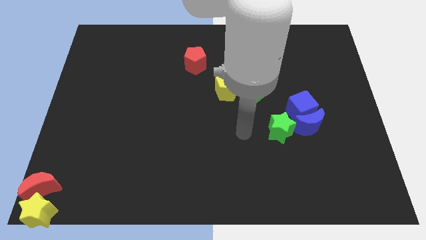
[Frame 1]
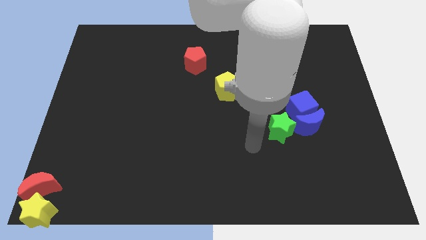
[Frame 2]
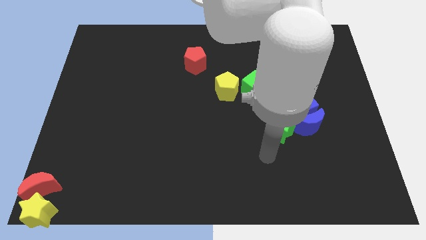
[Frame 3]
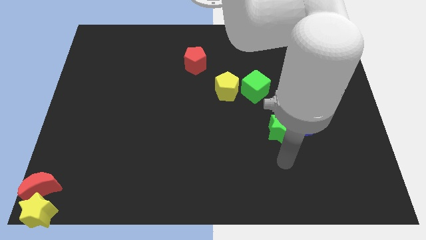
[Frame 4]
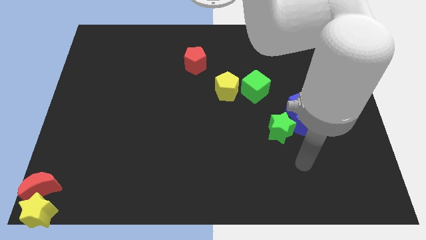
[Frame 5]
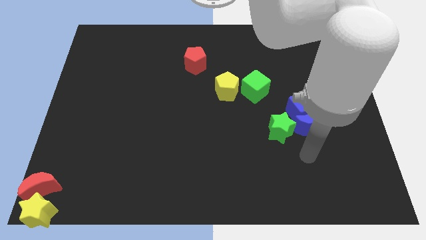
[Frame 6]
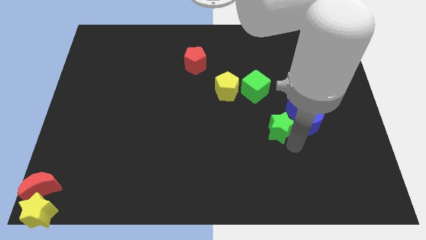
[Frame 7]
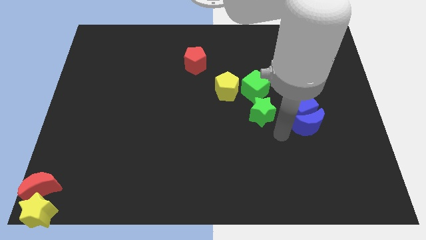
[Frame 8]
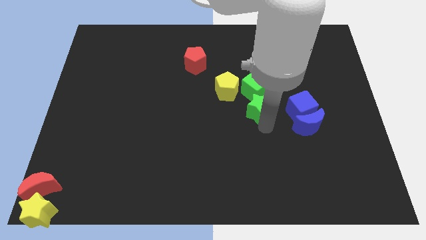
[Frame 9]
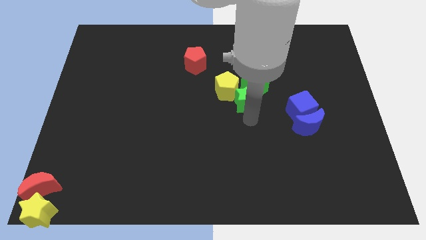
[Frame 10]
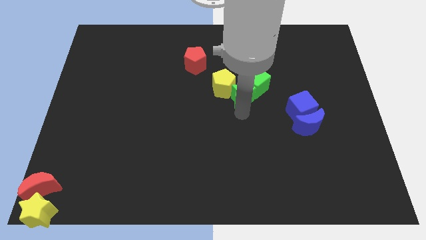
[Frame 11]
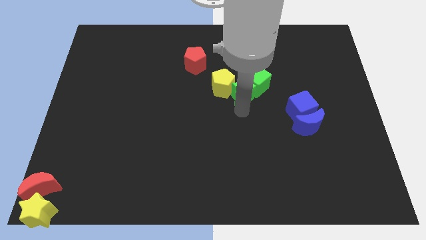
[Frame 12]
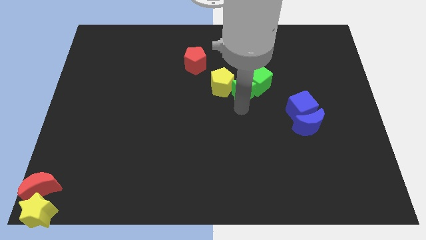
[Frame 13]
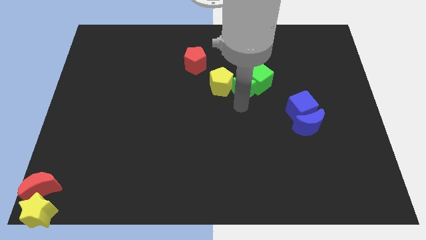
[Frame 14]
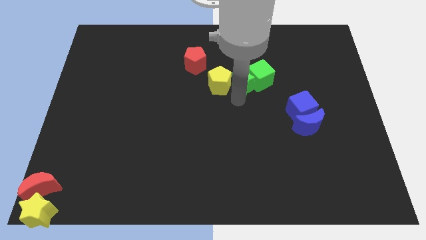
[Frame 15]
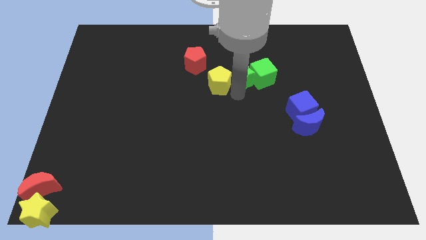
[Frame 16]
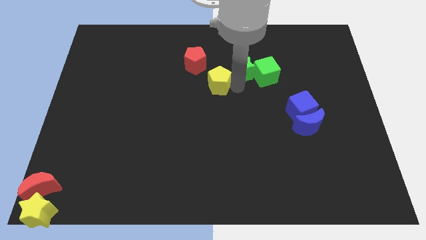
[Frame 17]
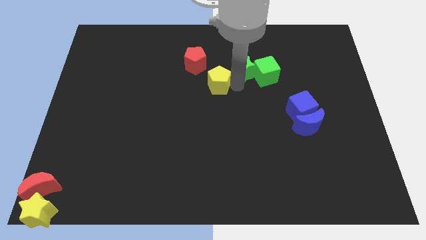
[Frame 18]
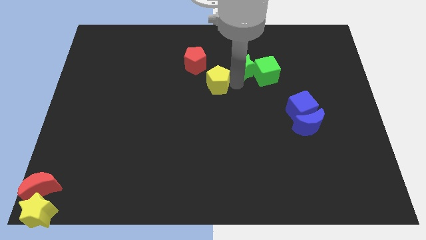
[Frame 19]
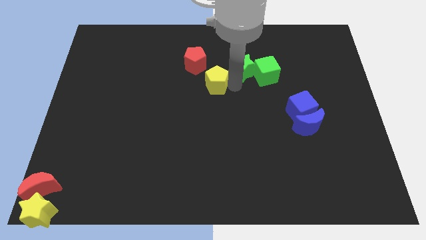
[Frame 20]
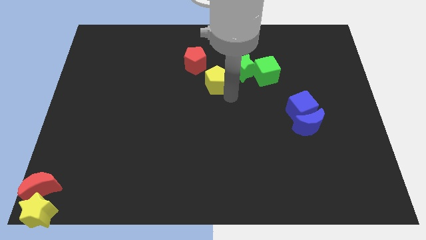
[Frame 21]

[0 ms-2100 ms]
place the green star to the left side of the green cube

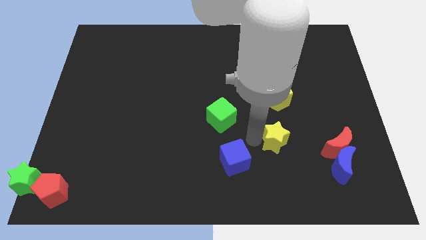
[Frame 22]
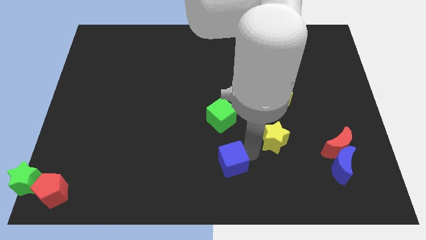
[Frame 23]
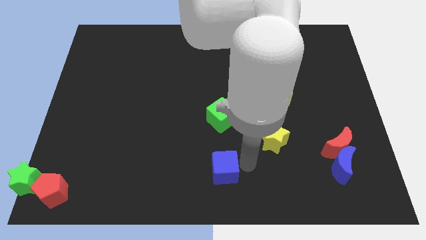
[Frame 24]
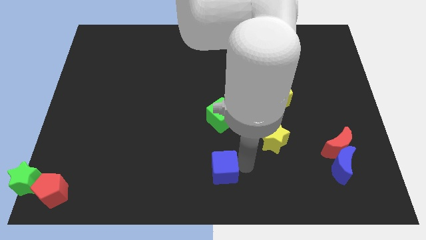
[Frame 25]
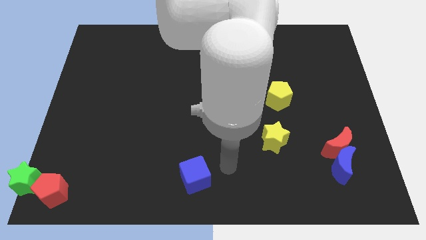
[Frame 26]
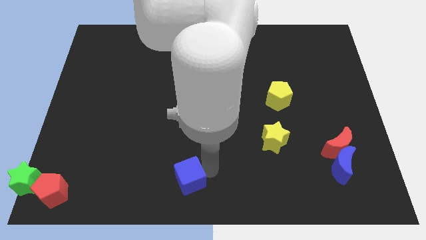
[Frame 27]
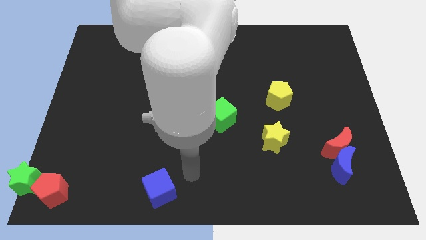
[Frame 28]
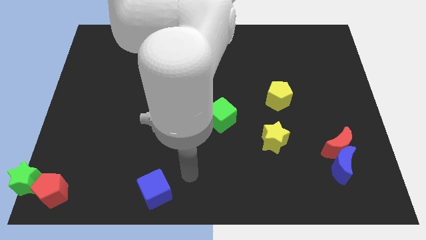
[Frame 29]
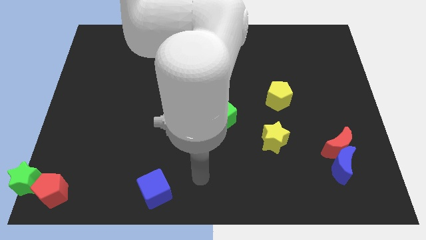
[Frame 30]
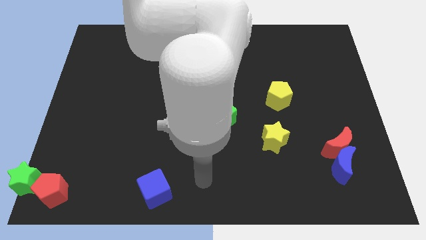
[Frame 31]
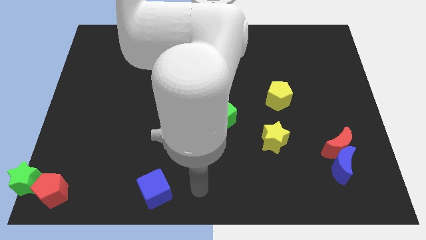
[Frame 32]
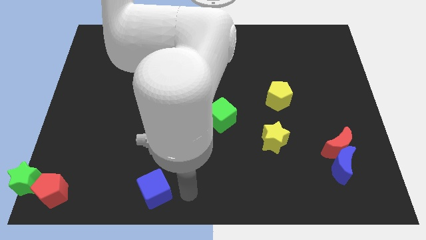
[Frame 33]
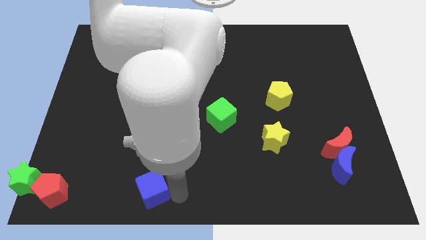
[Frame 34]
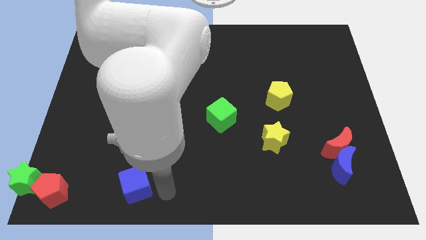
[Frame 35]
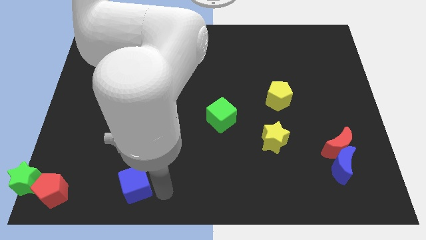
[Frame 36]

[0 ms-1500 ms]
push the blue cube towards the bottom left side of the board

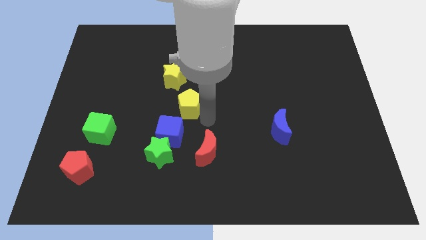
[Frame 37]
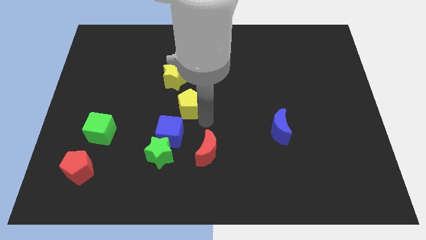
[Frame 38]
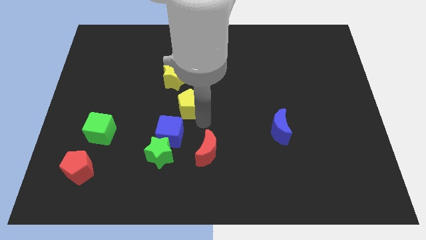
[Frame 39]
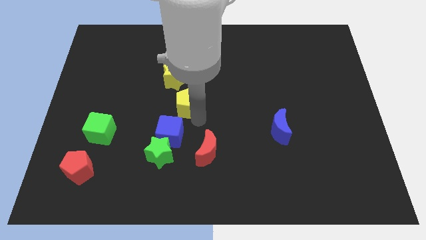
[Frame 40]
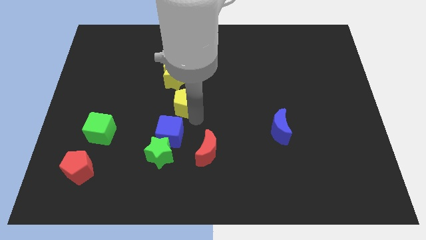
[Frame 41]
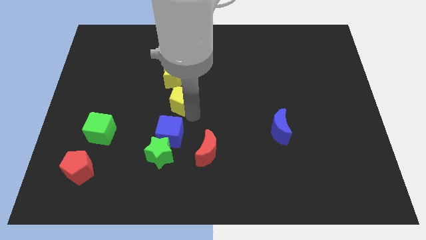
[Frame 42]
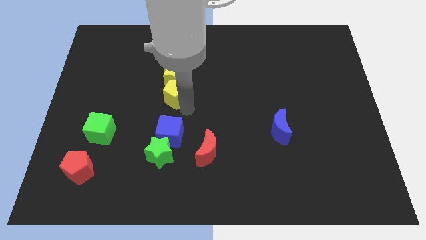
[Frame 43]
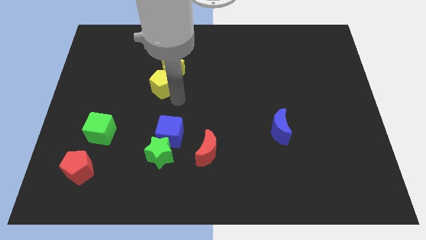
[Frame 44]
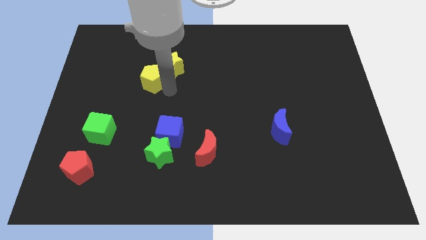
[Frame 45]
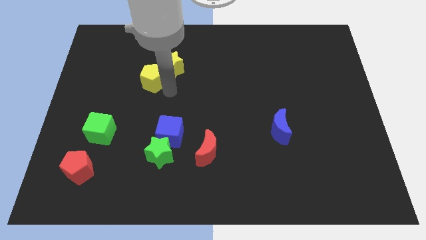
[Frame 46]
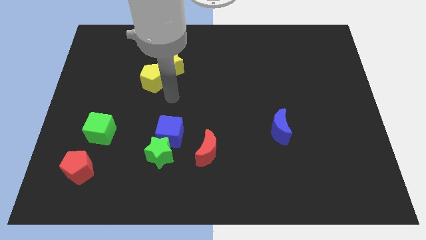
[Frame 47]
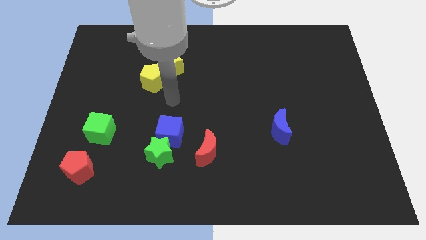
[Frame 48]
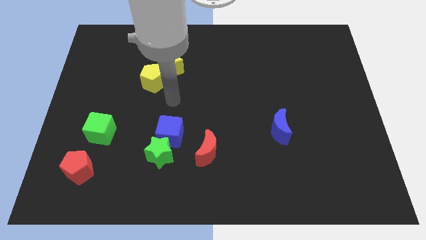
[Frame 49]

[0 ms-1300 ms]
push the yellow pentagon into the yellow star

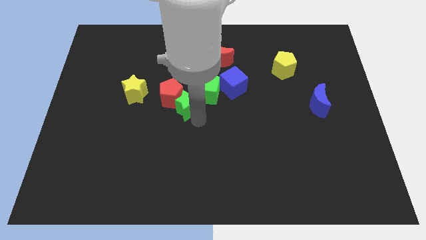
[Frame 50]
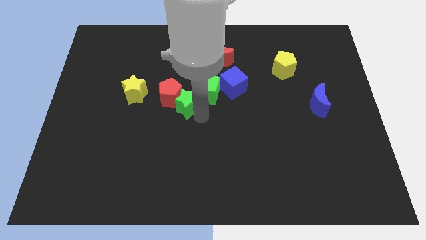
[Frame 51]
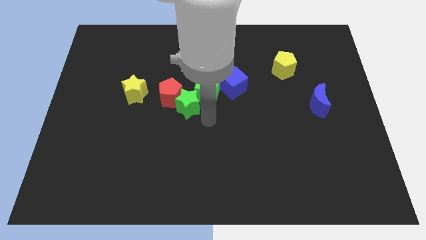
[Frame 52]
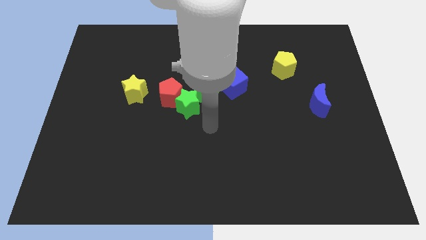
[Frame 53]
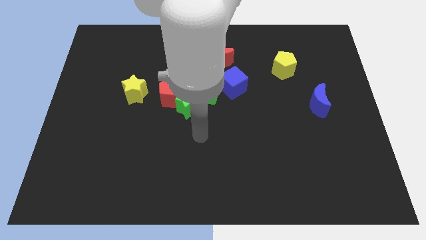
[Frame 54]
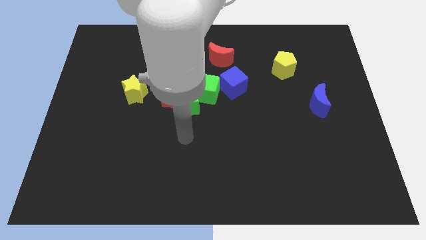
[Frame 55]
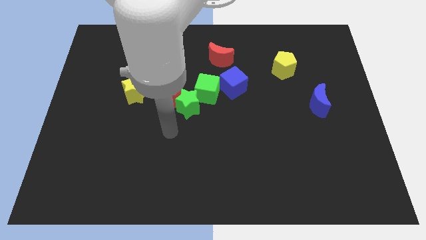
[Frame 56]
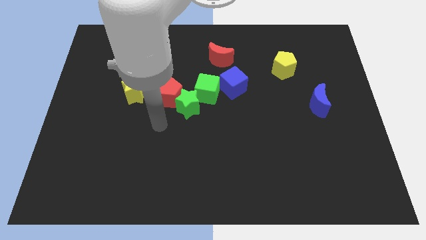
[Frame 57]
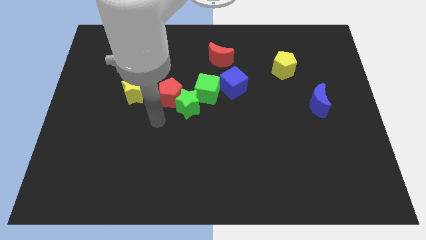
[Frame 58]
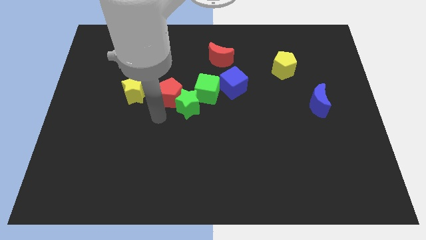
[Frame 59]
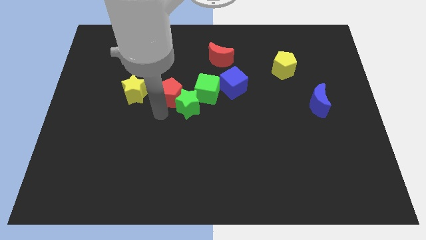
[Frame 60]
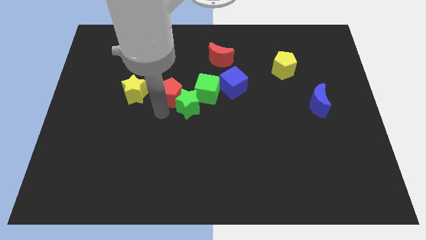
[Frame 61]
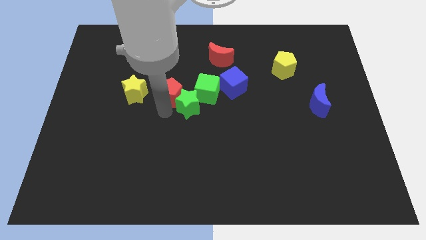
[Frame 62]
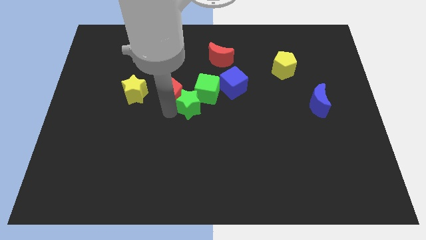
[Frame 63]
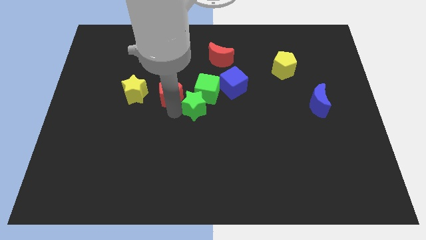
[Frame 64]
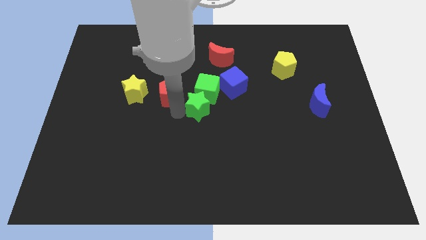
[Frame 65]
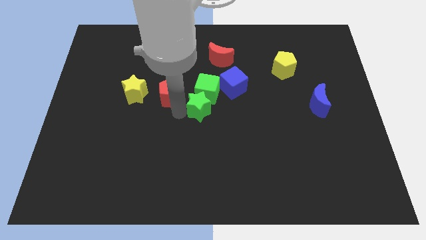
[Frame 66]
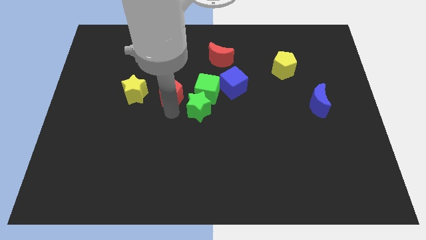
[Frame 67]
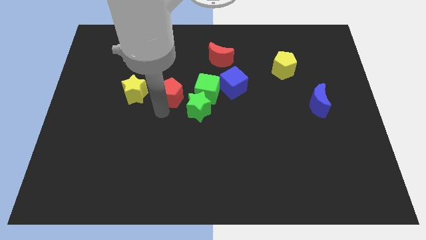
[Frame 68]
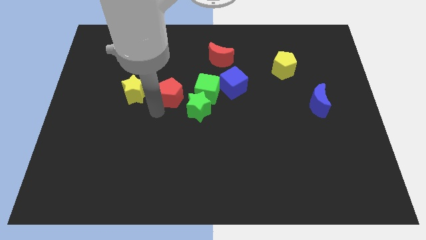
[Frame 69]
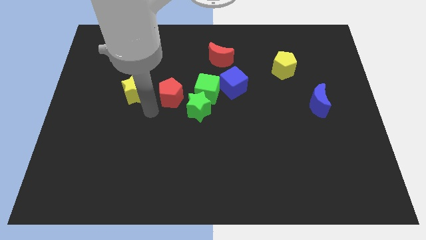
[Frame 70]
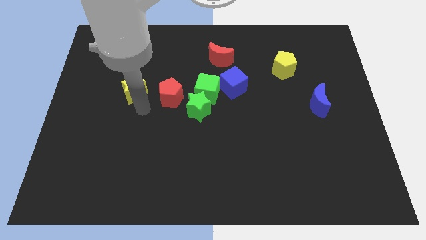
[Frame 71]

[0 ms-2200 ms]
separate the green star from the red pentagon

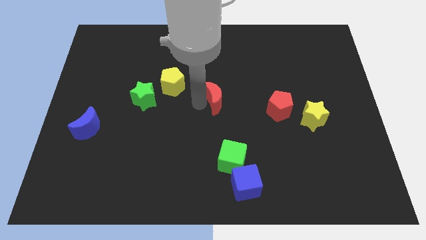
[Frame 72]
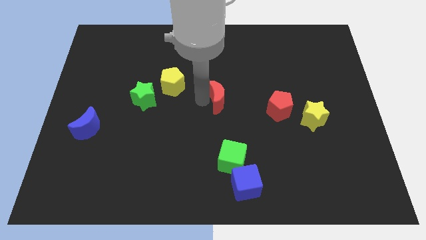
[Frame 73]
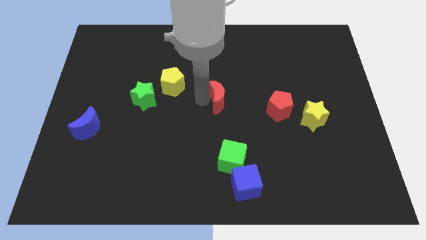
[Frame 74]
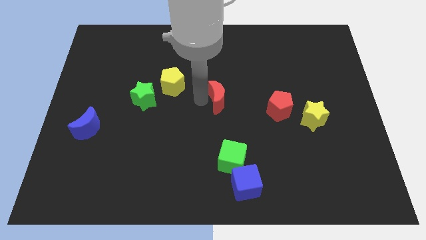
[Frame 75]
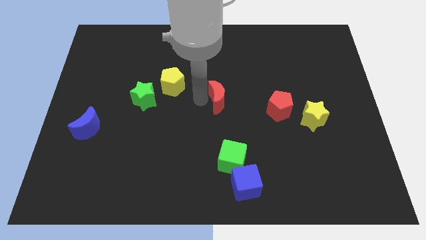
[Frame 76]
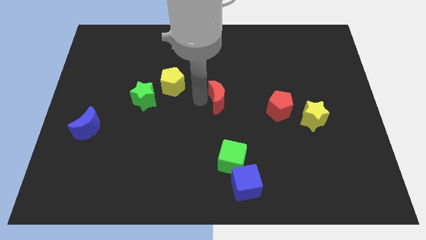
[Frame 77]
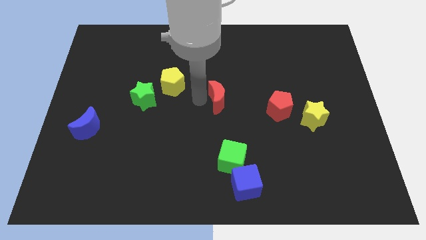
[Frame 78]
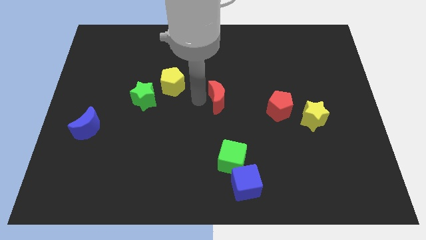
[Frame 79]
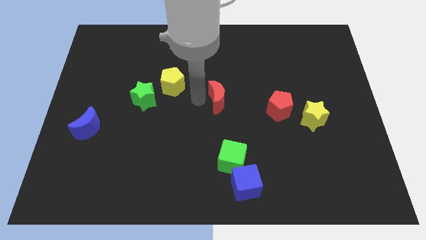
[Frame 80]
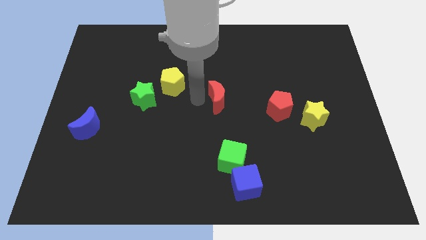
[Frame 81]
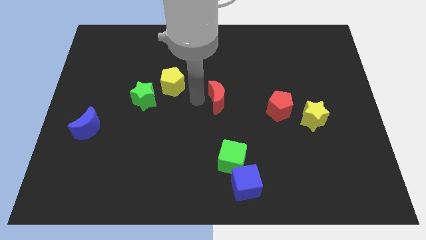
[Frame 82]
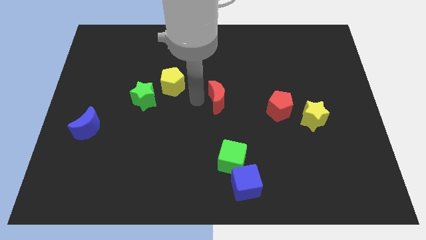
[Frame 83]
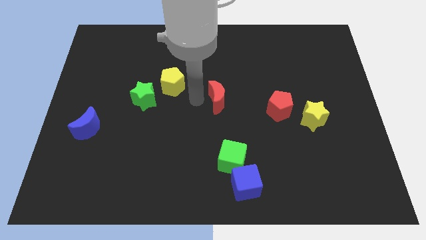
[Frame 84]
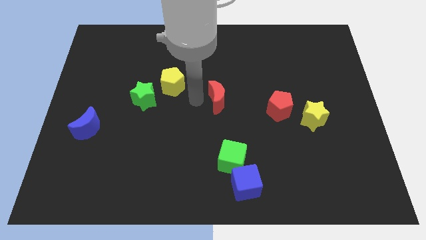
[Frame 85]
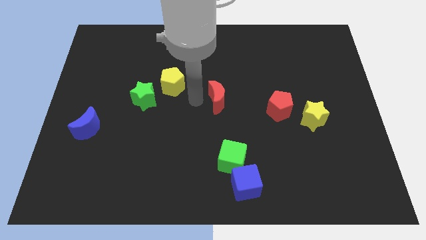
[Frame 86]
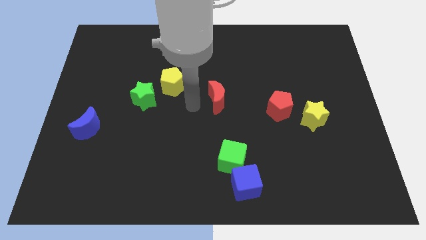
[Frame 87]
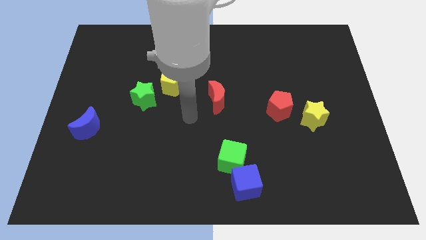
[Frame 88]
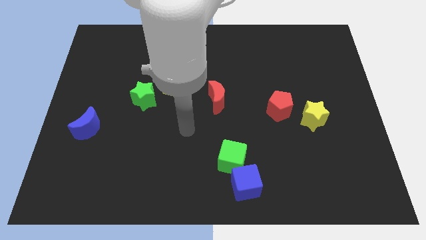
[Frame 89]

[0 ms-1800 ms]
slightly move the red crescent towards top
